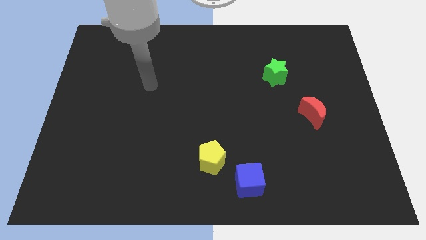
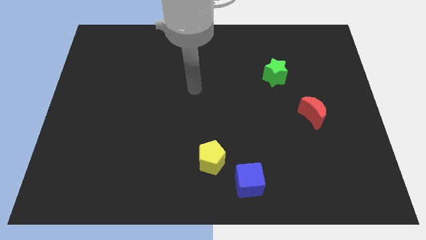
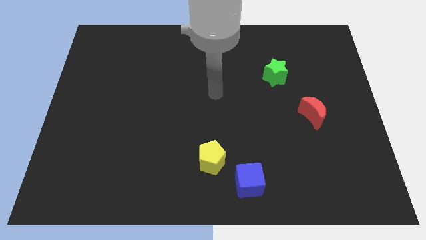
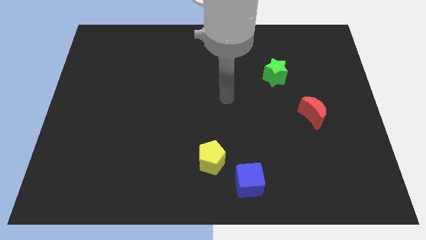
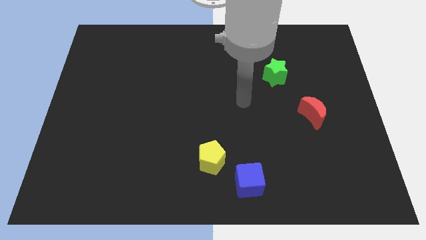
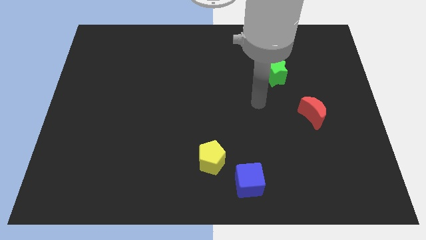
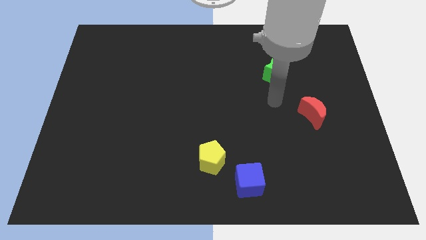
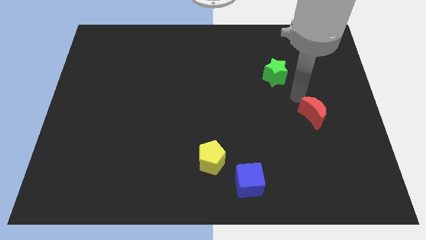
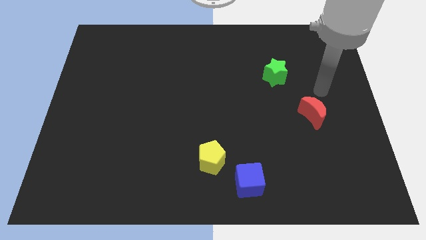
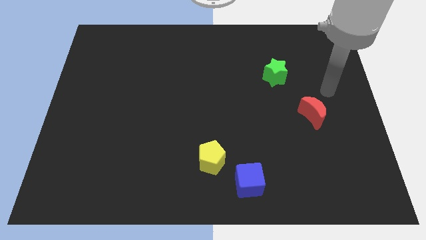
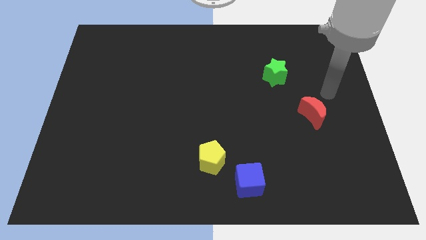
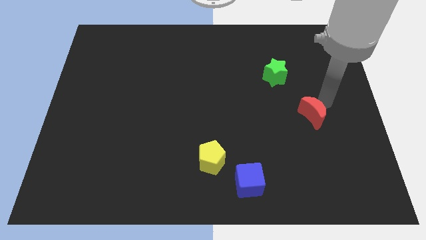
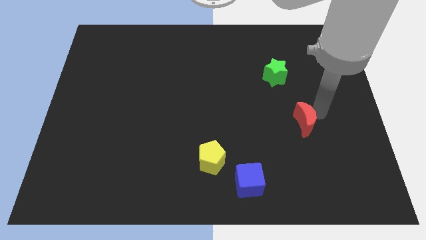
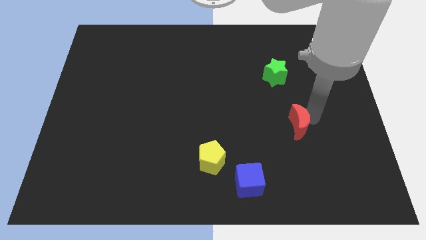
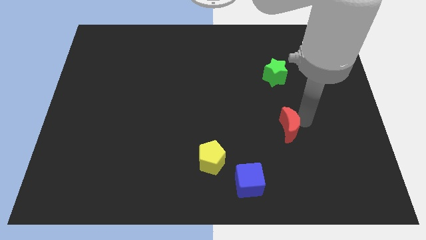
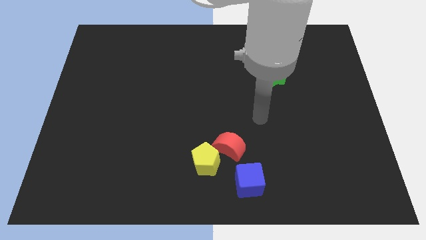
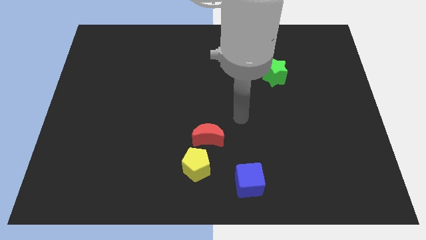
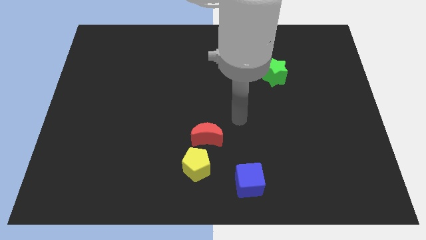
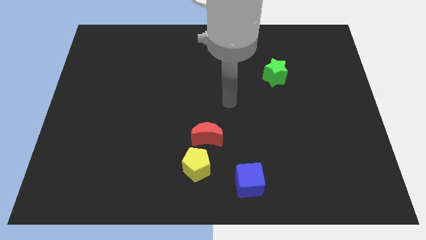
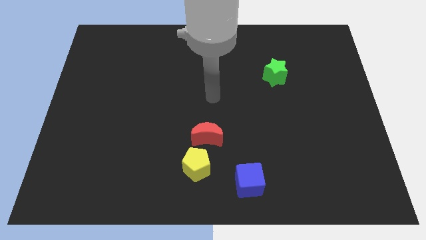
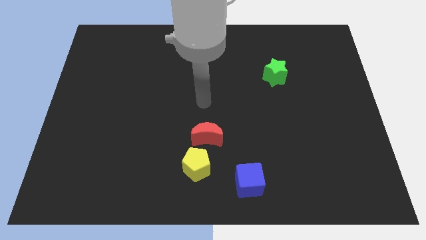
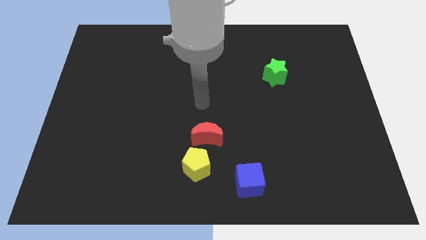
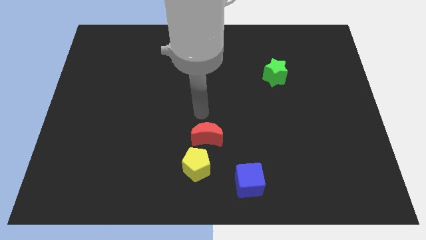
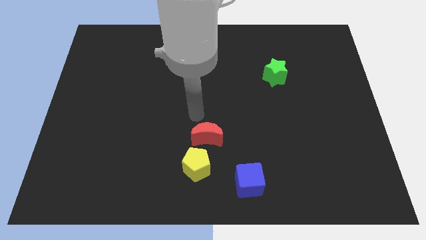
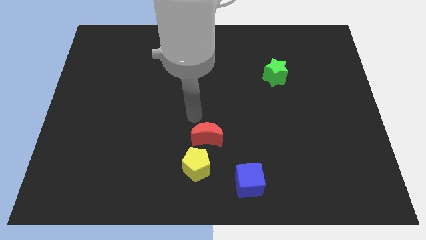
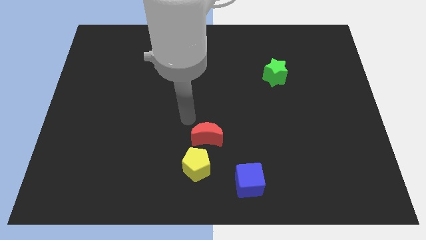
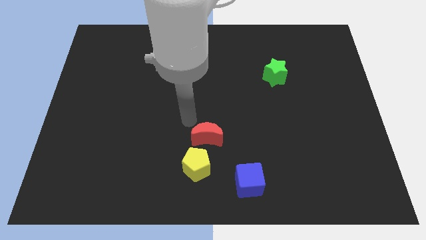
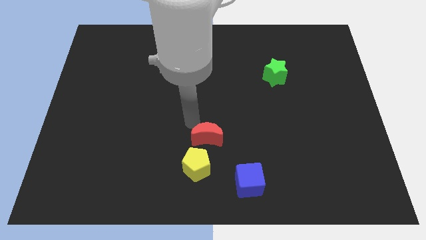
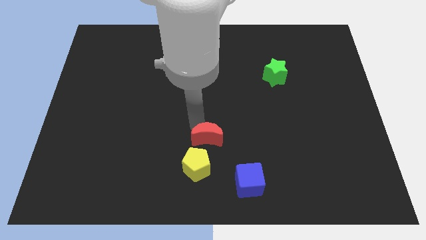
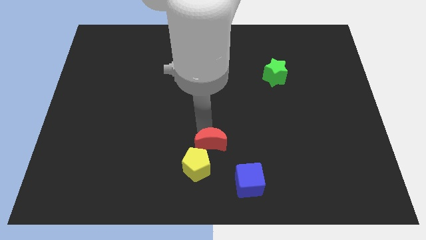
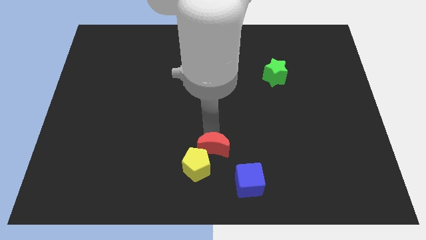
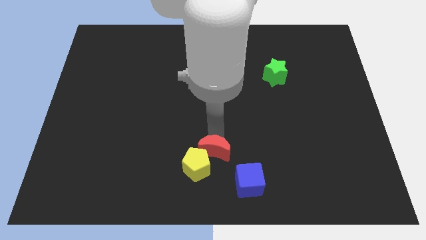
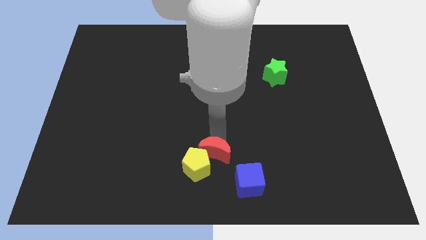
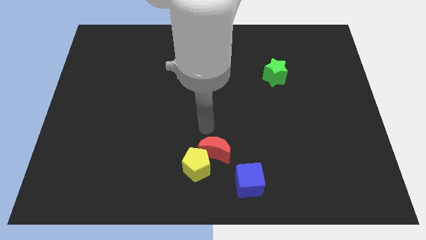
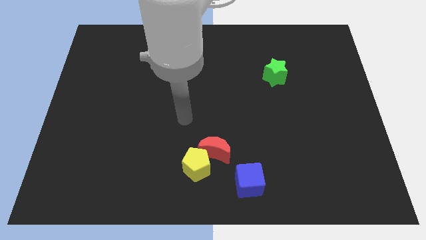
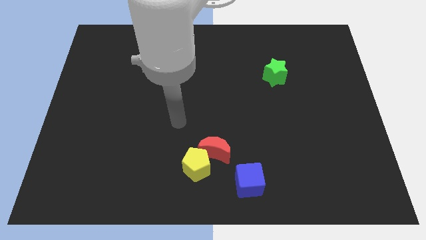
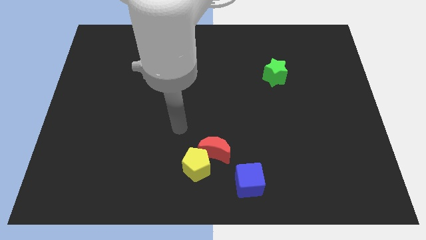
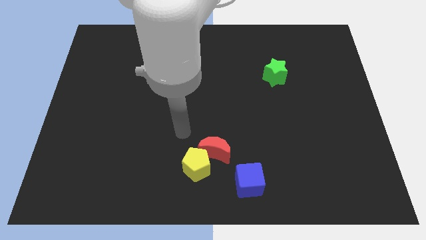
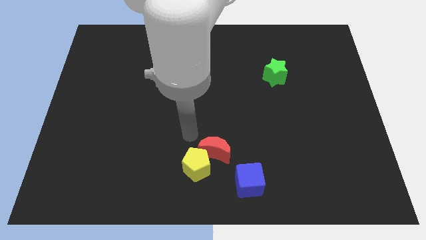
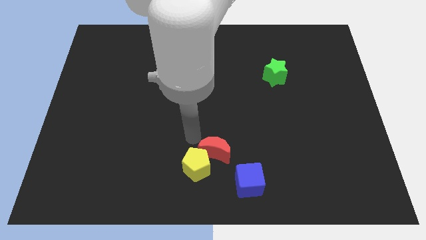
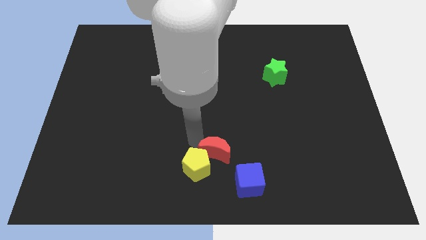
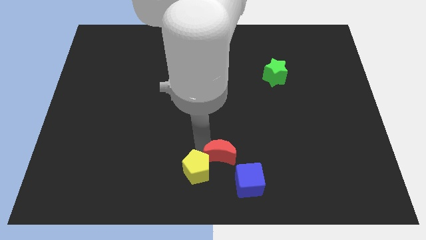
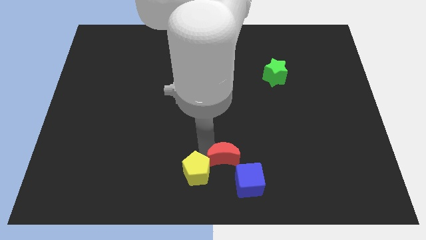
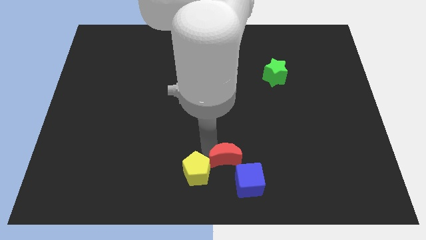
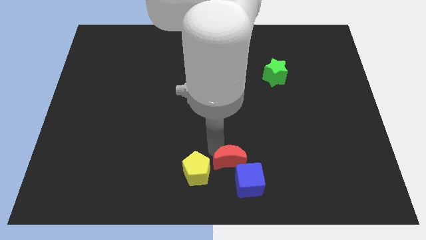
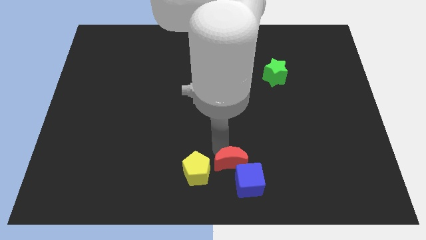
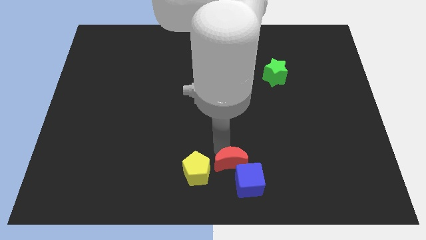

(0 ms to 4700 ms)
push the red moon to the cube

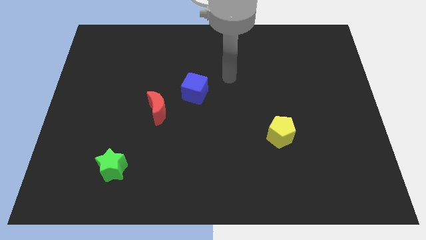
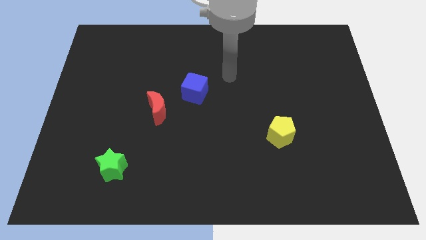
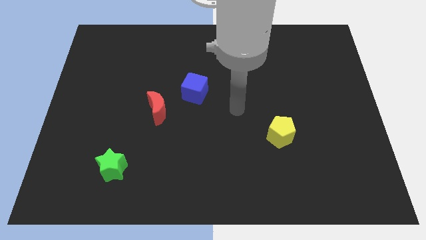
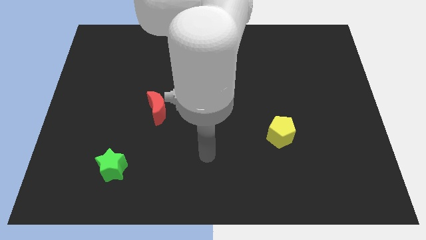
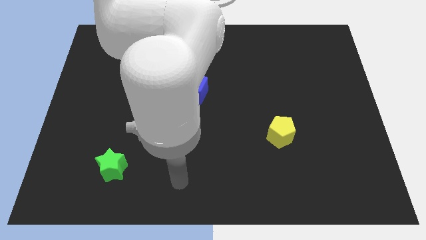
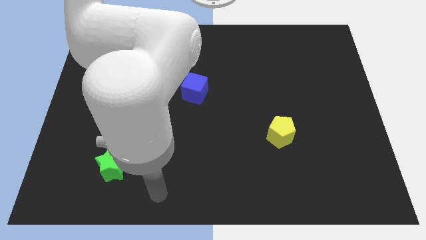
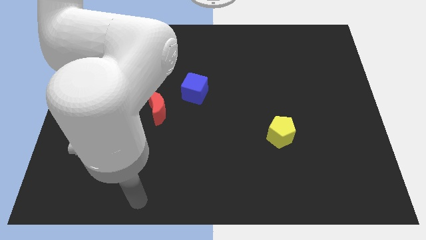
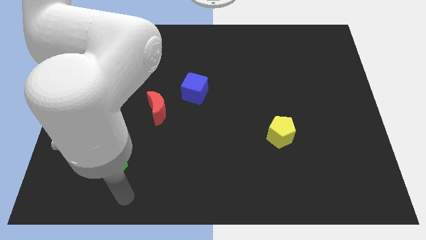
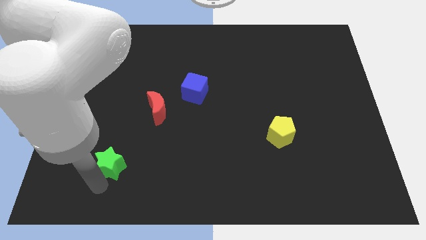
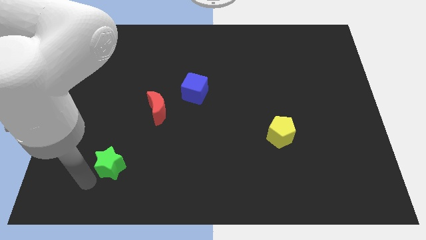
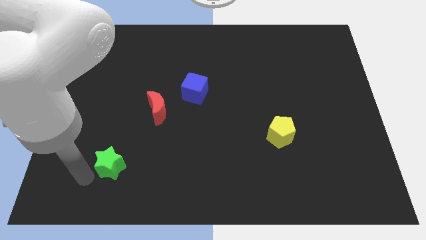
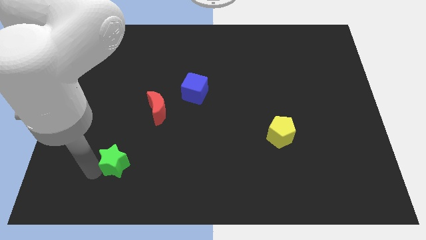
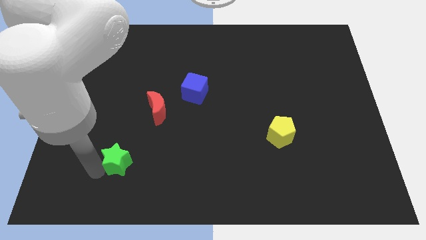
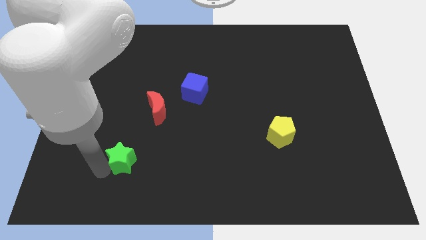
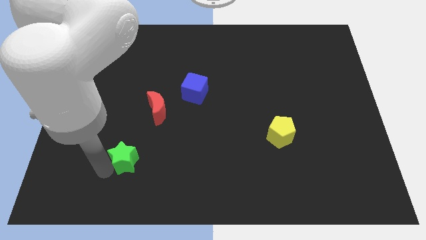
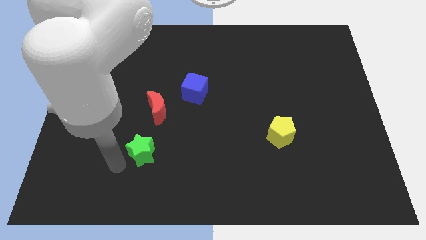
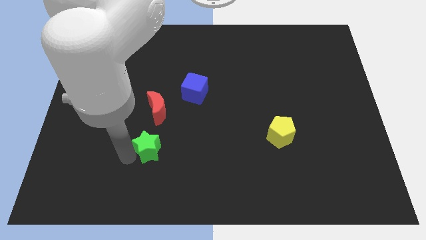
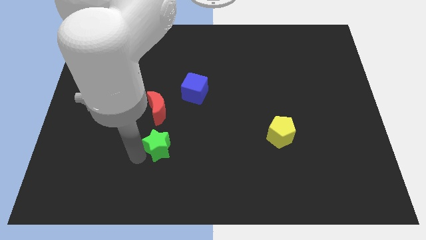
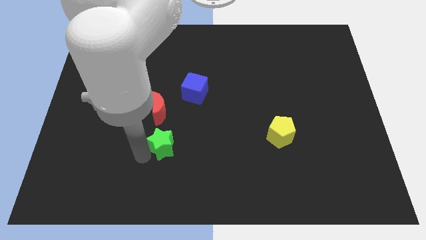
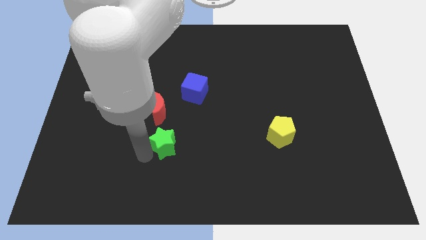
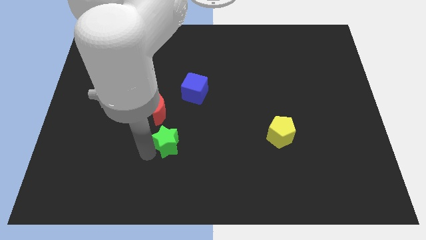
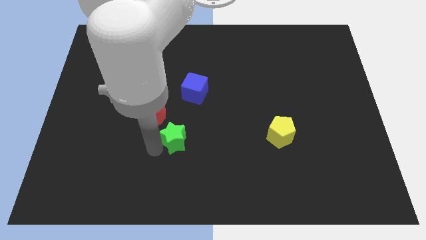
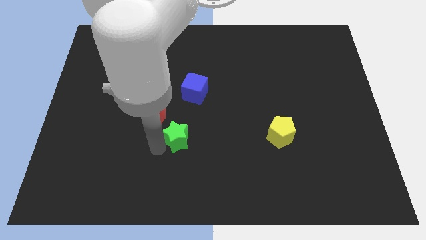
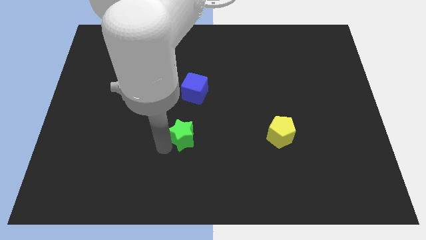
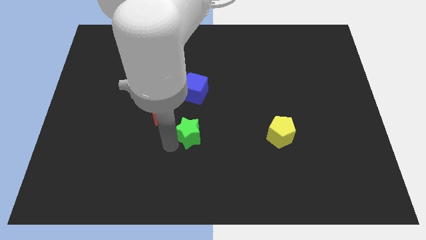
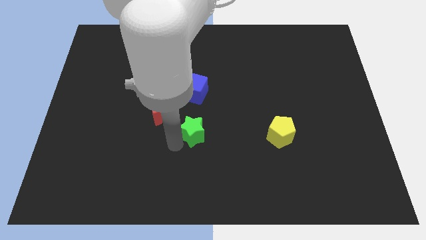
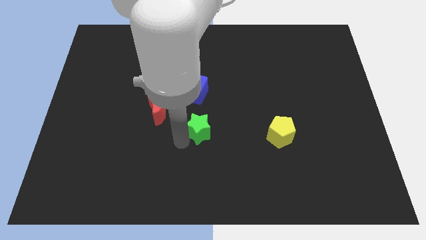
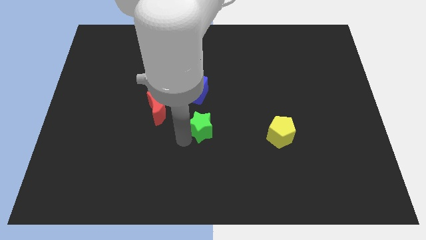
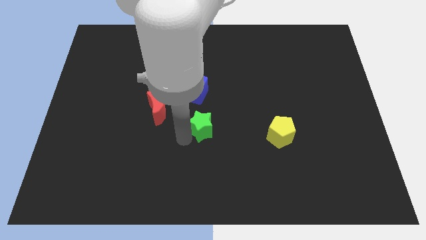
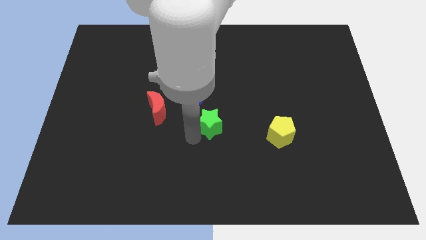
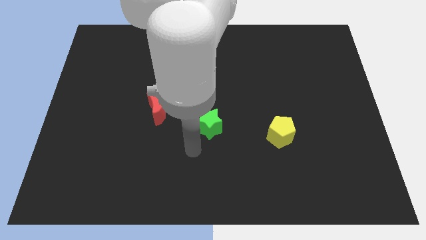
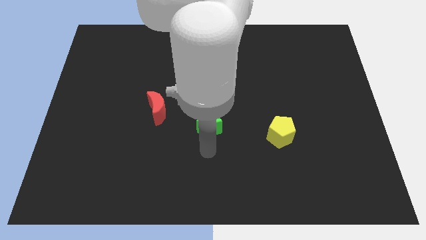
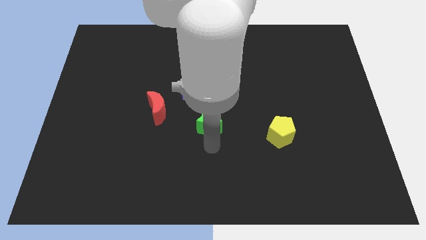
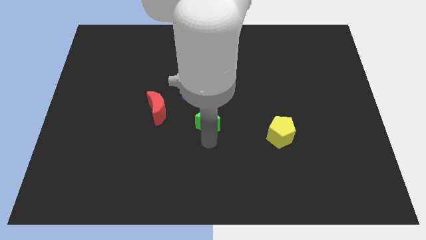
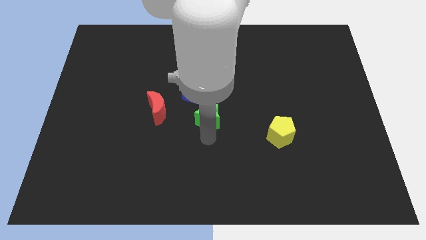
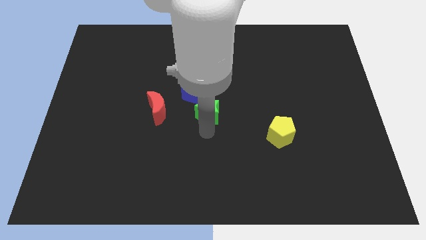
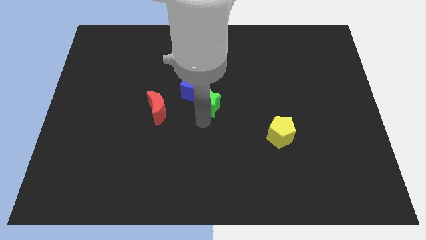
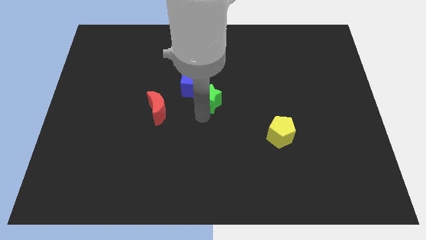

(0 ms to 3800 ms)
move the star close to the blue block

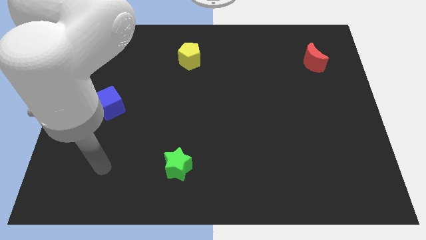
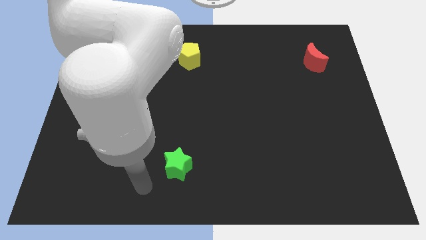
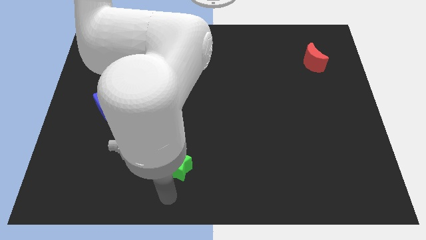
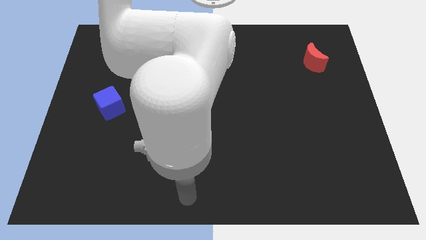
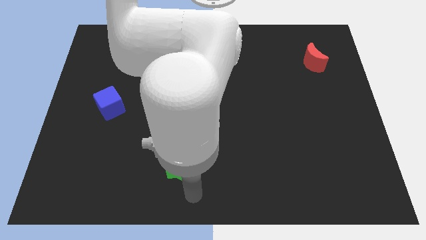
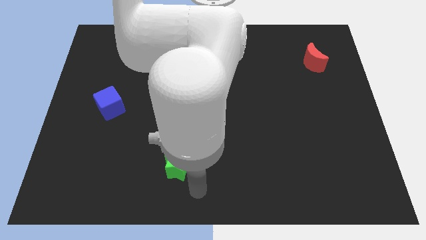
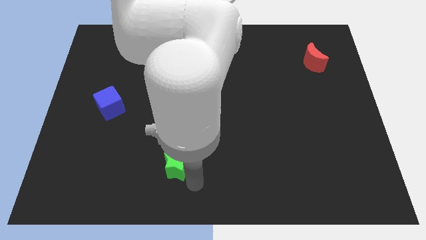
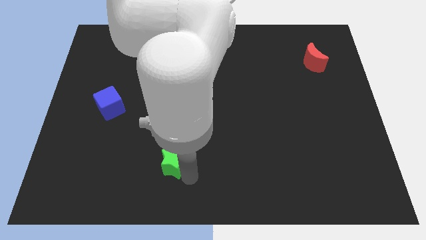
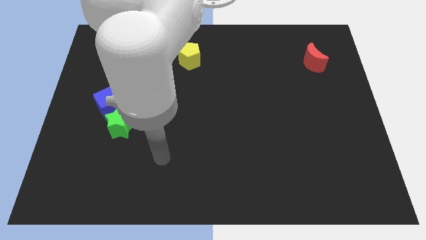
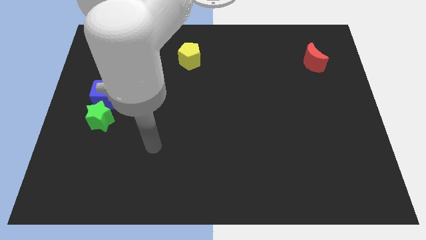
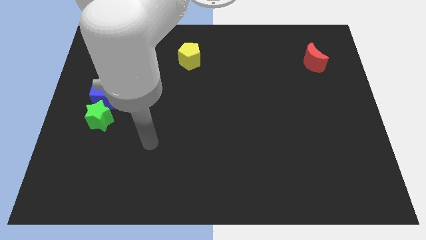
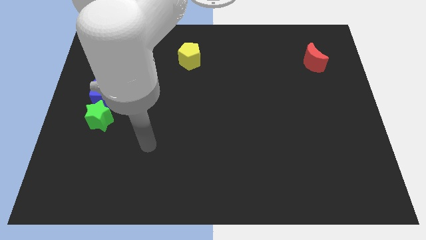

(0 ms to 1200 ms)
move the green block towards the blue cube
